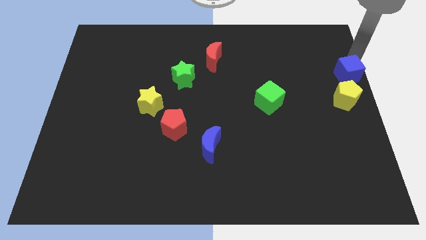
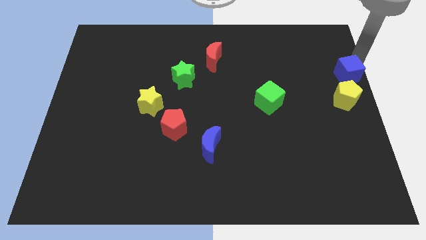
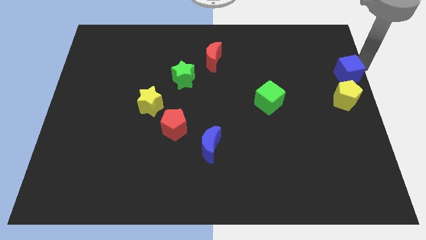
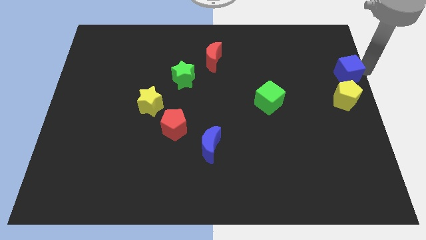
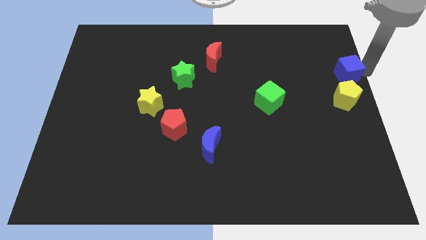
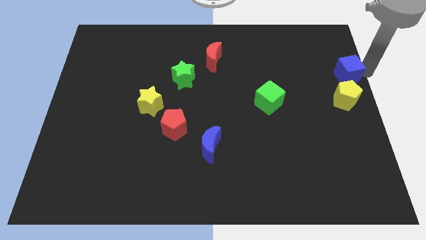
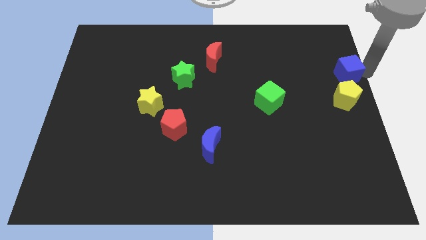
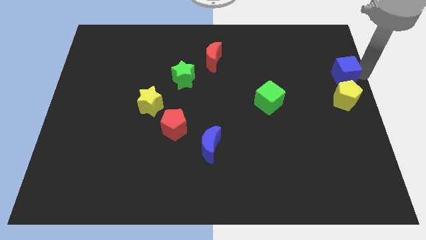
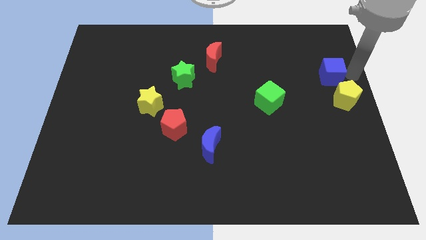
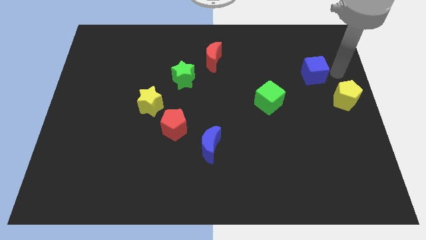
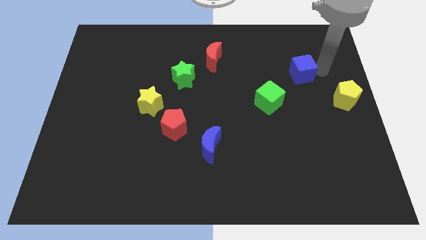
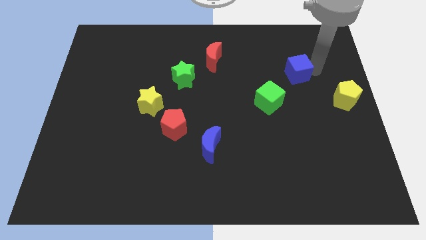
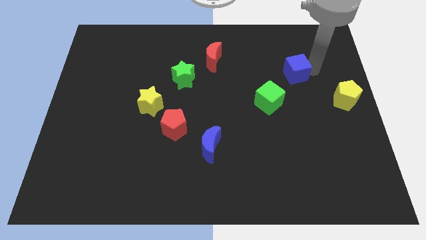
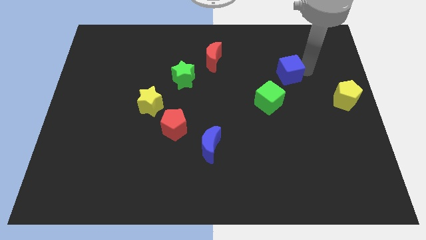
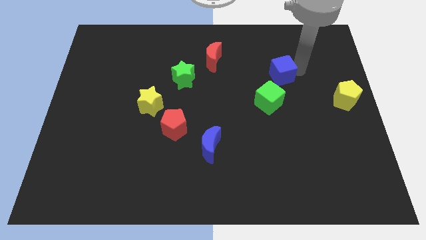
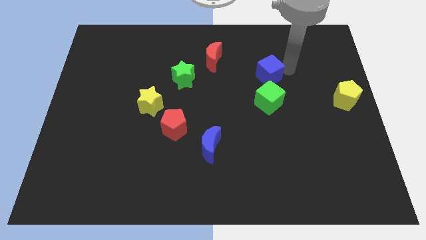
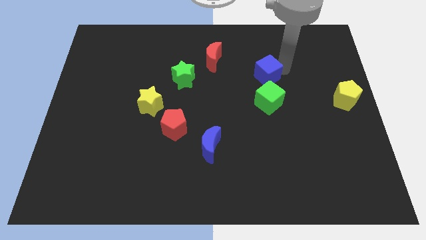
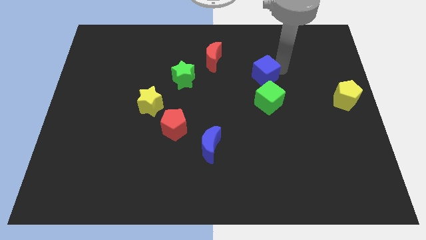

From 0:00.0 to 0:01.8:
slide the blue cube slightly to the left

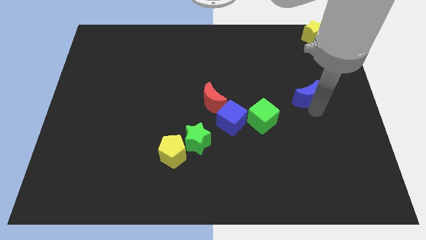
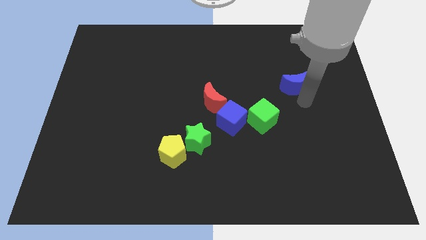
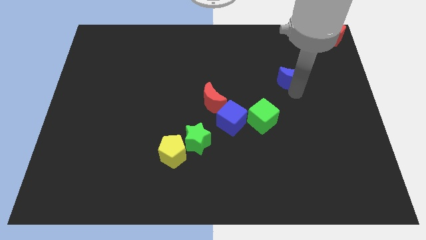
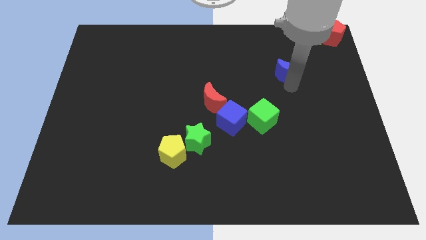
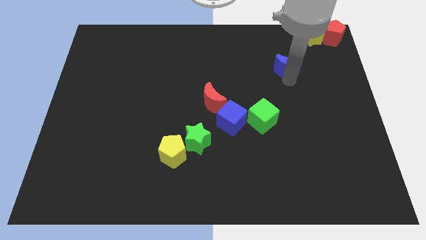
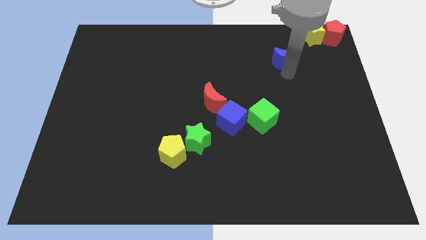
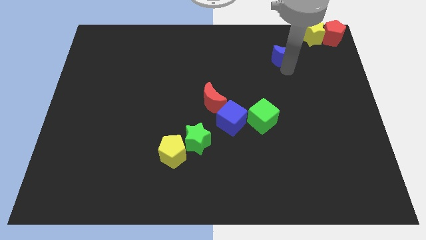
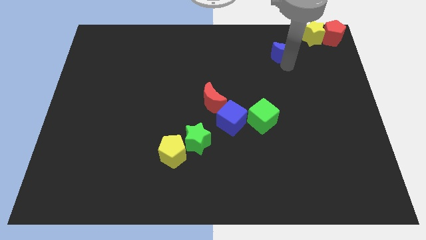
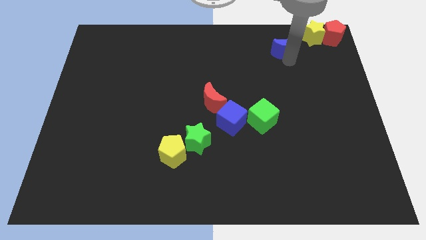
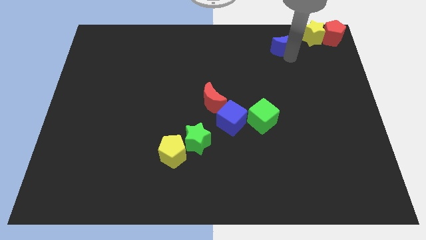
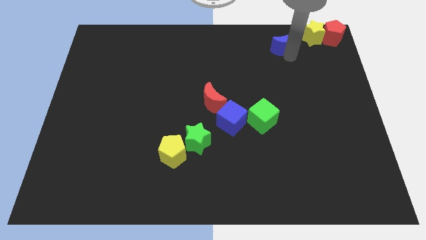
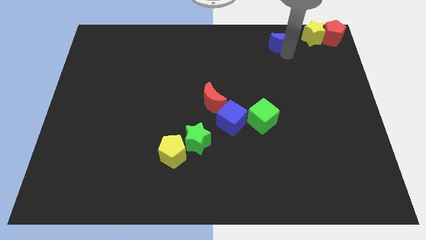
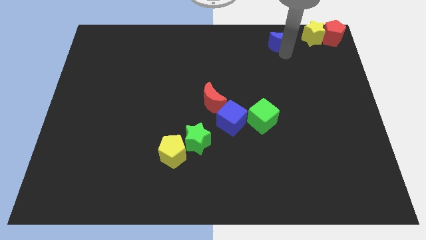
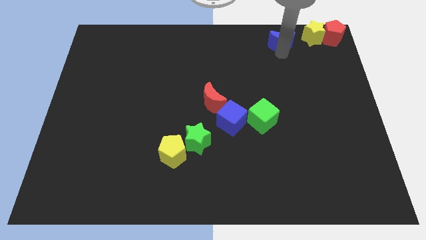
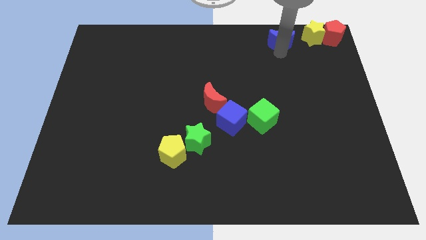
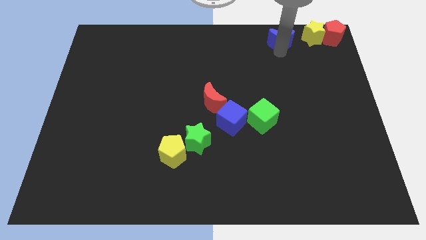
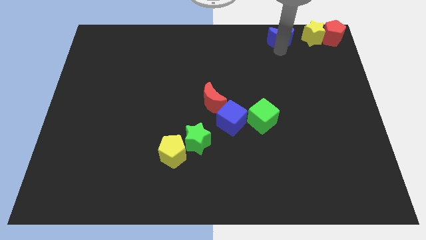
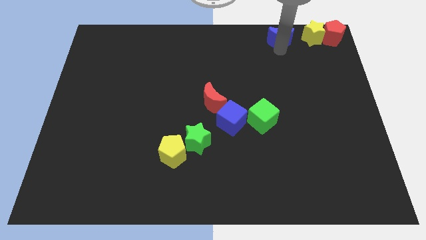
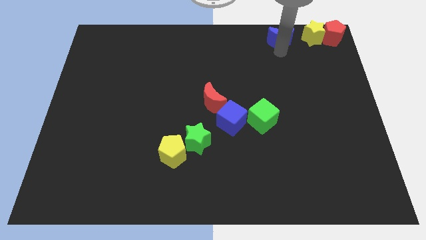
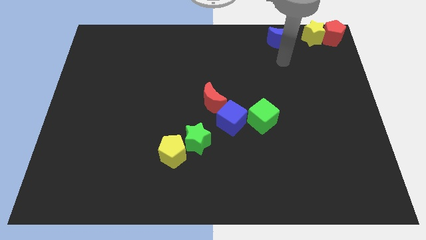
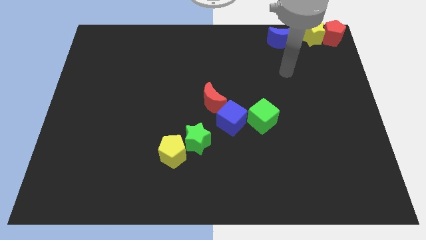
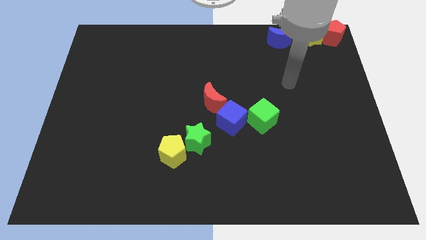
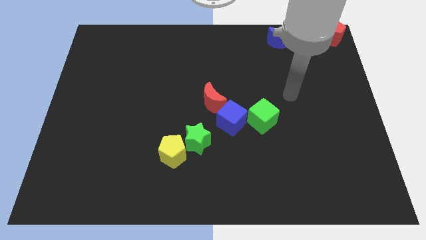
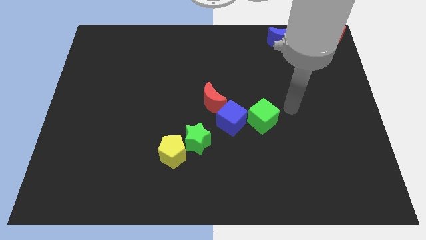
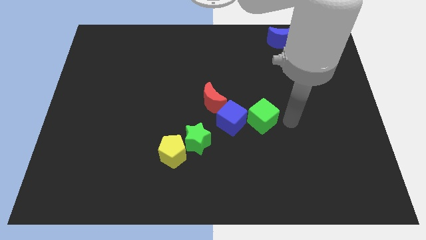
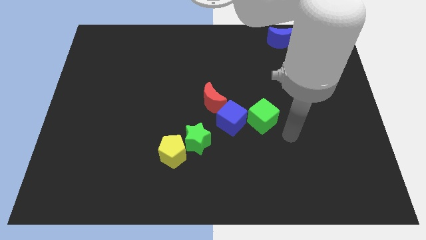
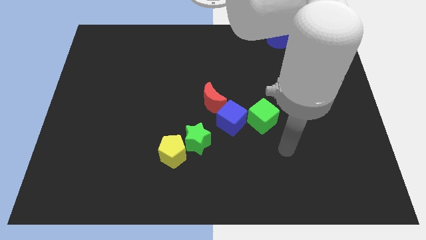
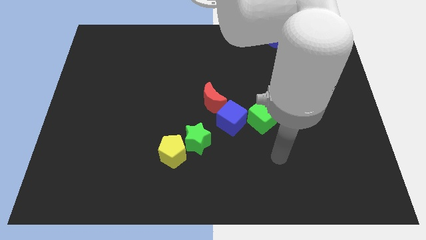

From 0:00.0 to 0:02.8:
push the blue moon left to yellow star

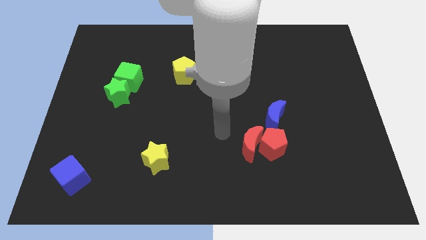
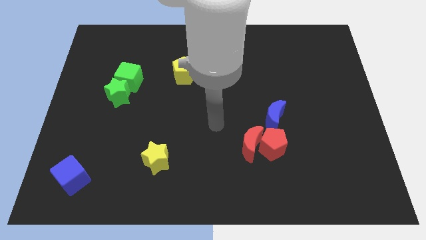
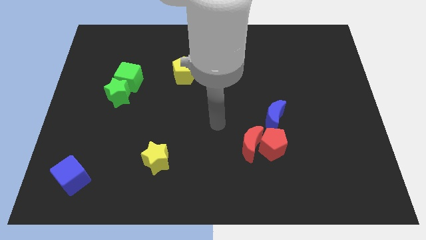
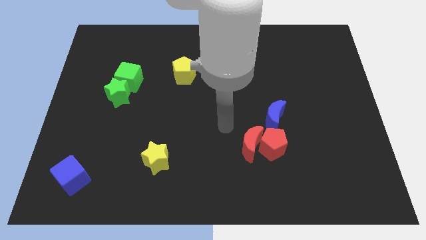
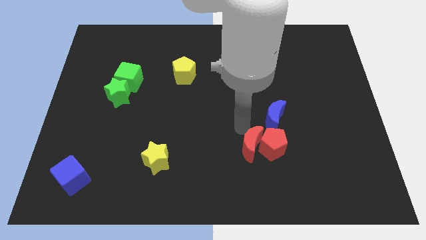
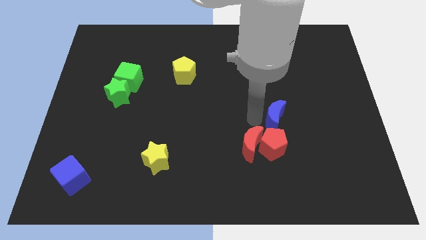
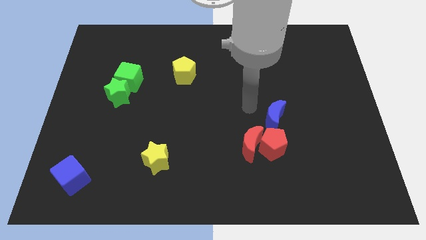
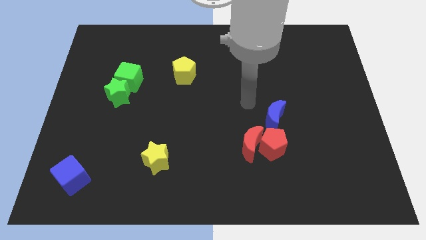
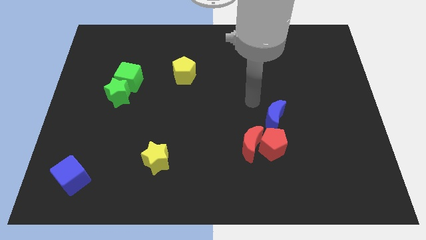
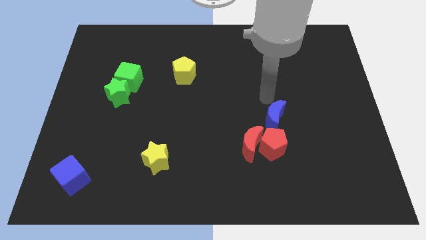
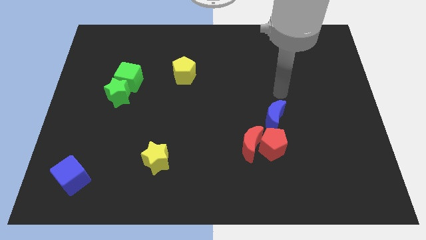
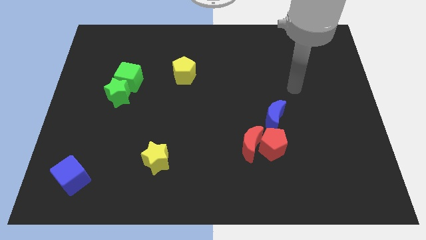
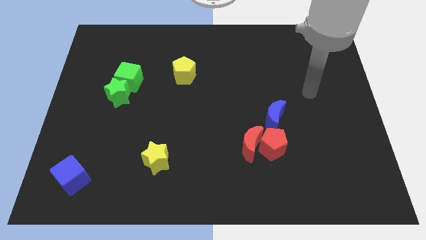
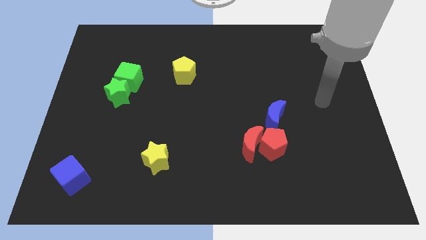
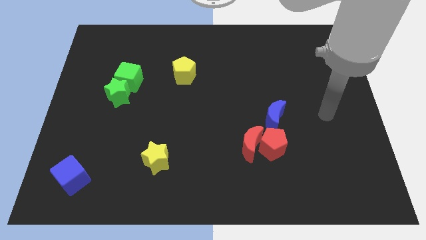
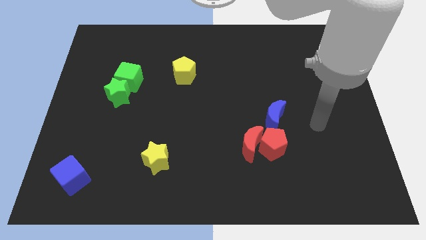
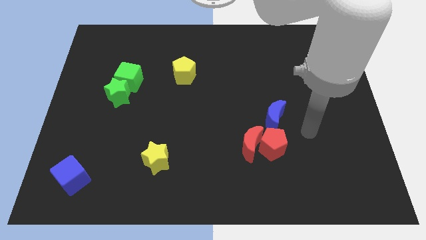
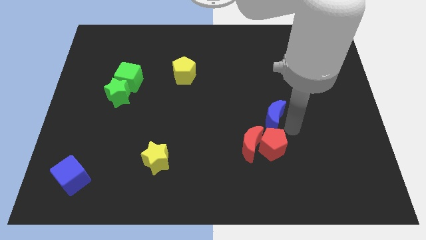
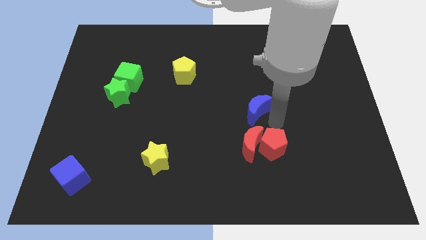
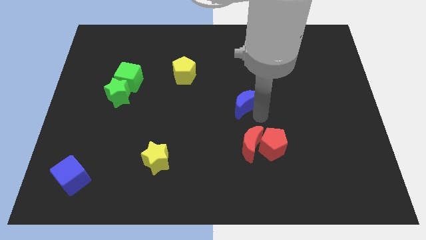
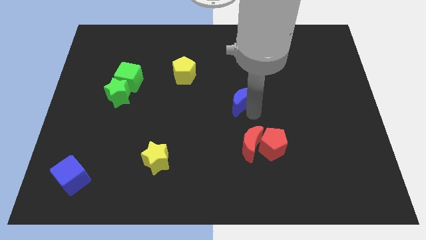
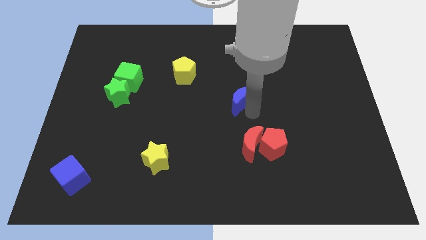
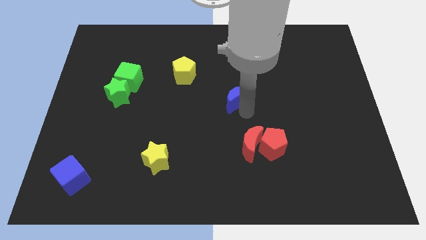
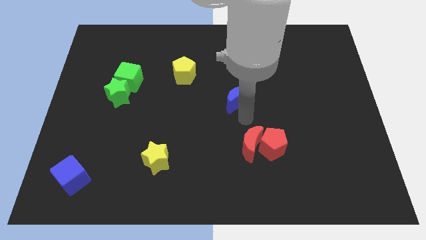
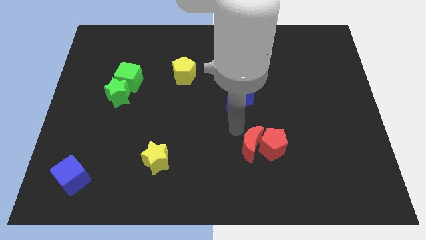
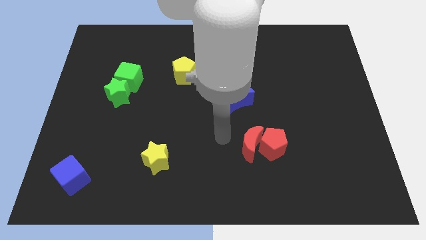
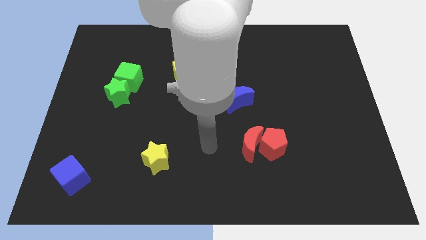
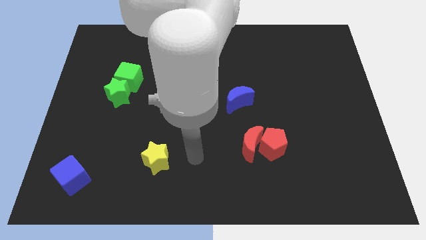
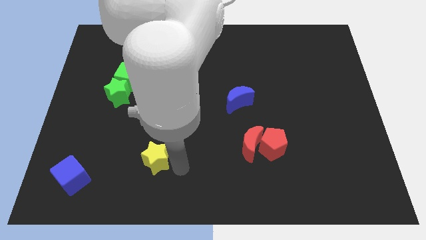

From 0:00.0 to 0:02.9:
push the blue crescent slightly to the center of the board

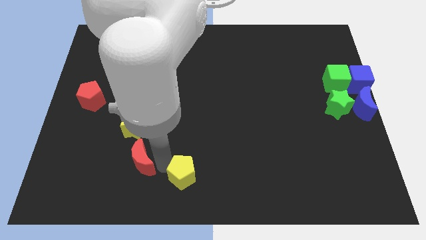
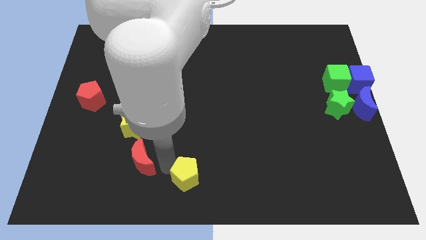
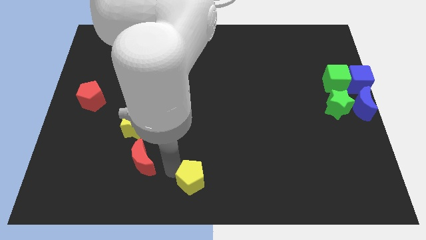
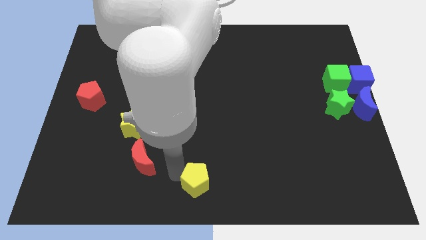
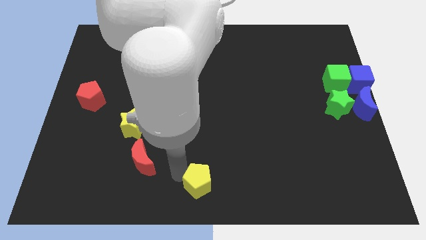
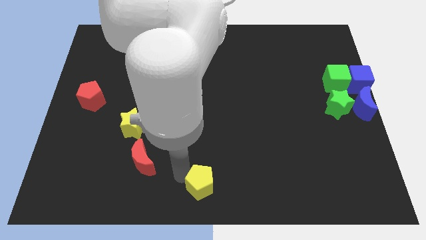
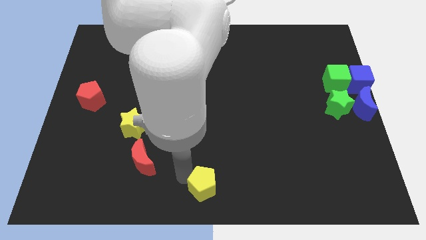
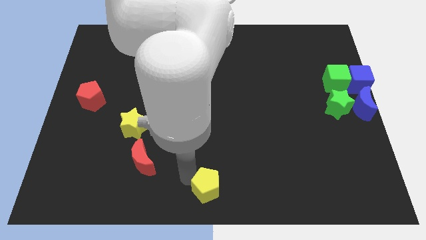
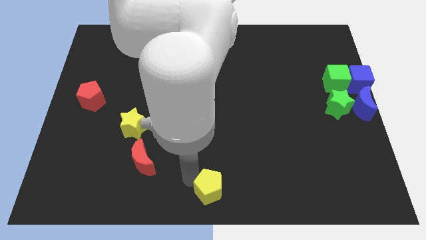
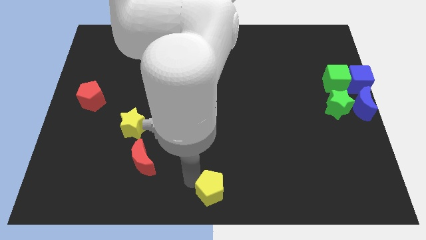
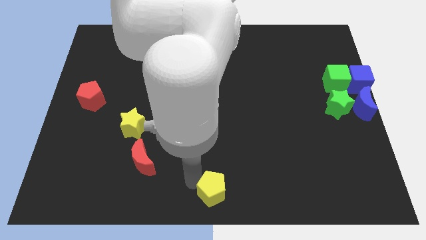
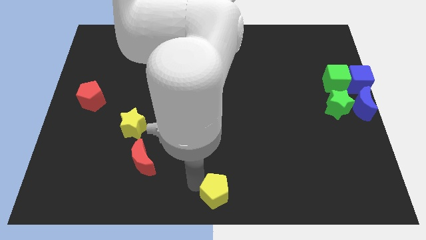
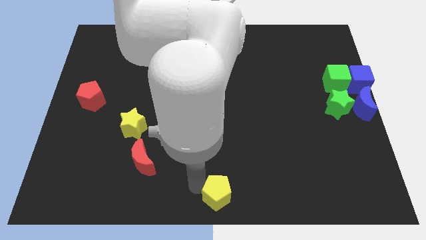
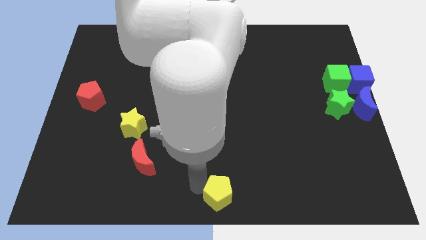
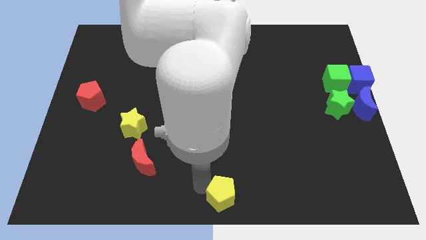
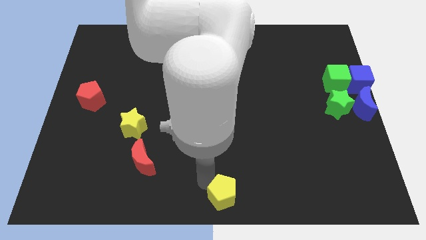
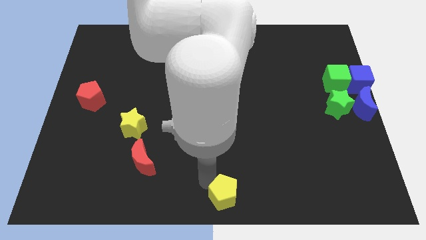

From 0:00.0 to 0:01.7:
push the yellow pentagon to the bottom center of the board
